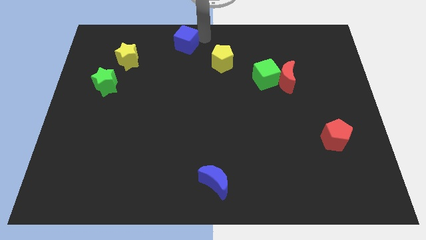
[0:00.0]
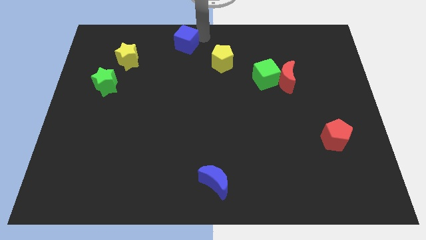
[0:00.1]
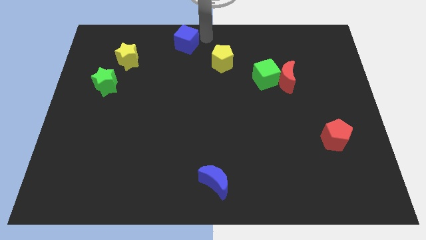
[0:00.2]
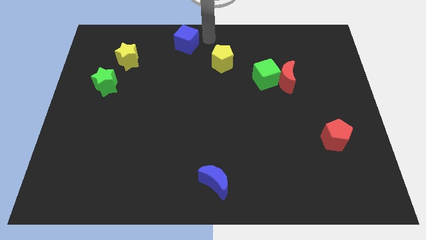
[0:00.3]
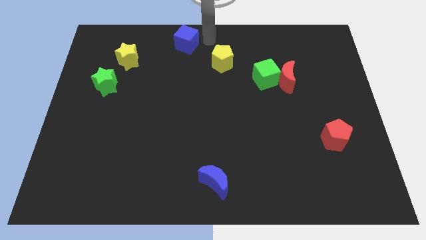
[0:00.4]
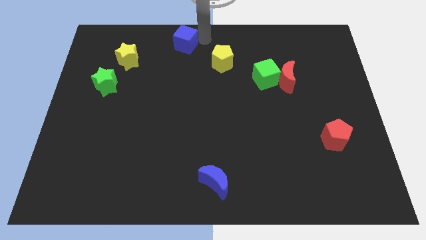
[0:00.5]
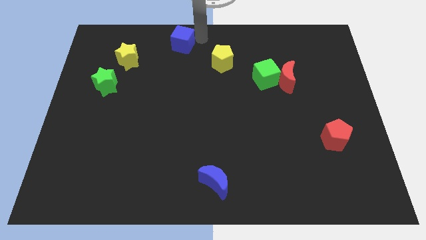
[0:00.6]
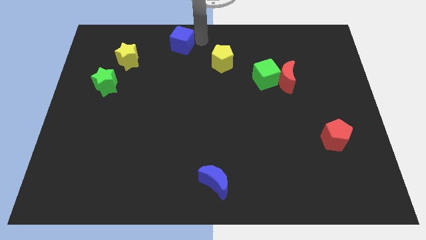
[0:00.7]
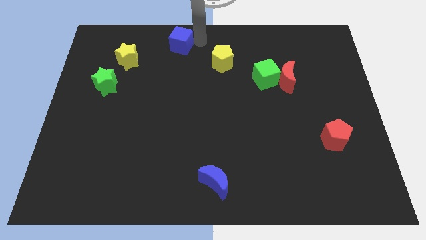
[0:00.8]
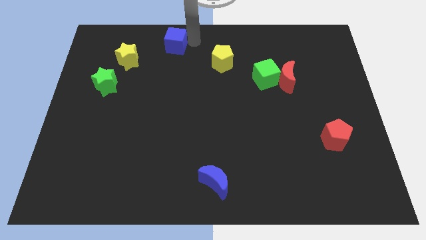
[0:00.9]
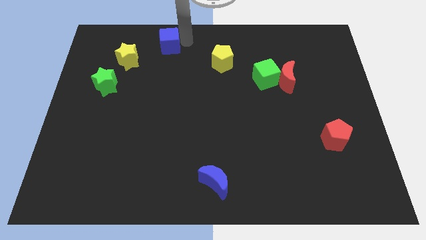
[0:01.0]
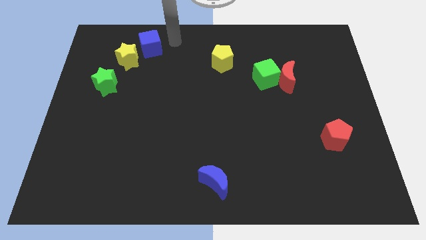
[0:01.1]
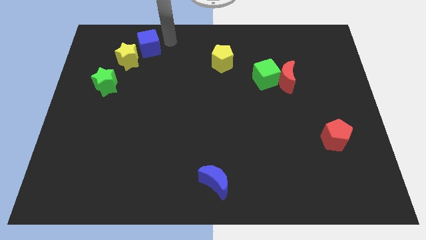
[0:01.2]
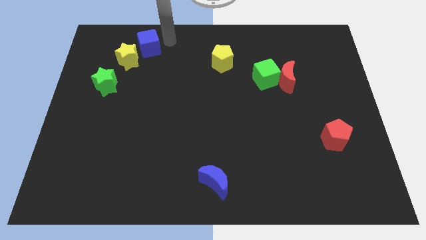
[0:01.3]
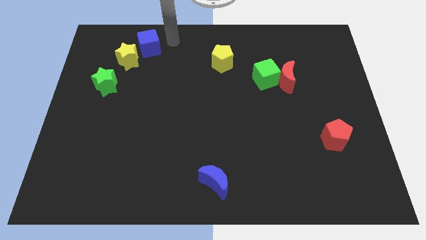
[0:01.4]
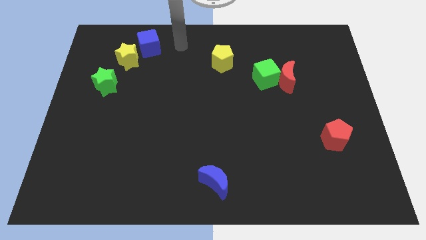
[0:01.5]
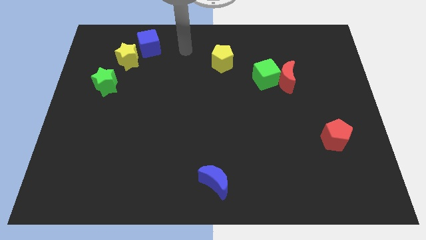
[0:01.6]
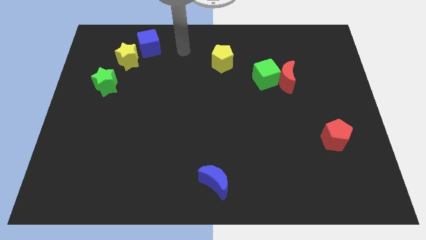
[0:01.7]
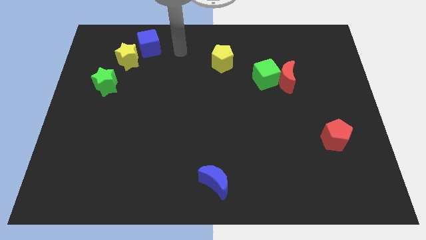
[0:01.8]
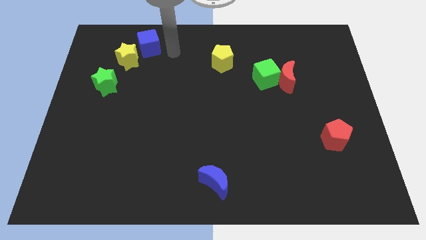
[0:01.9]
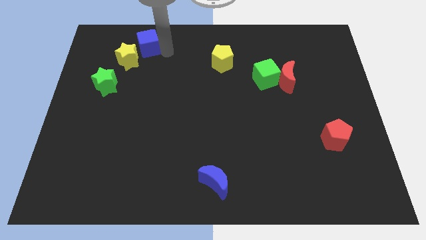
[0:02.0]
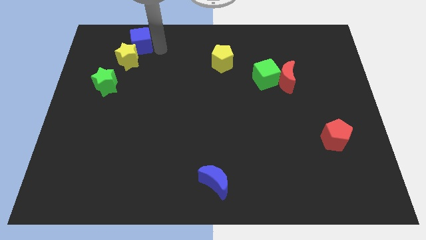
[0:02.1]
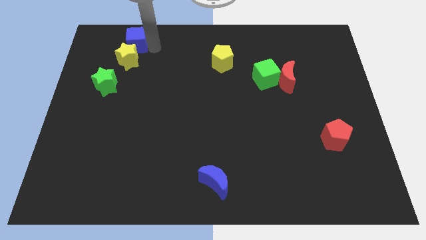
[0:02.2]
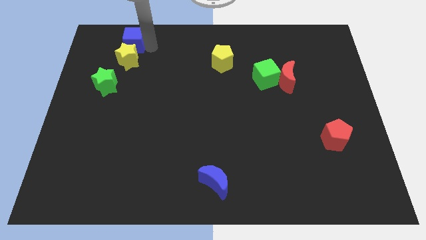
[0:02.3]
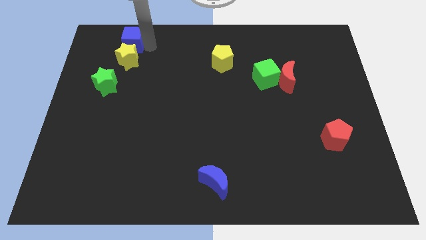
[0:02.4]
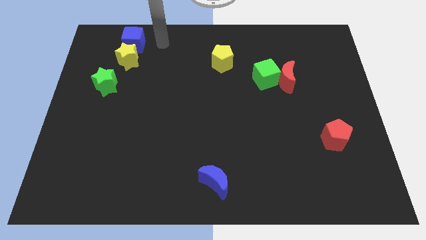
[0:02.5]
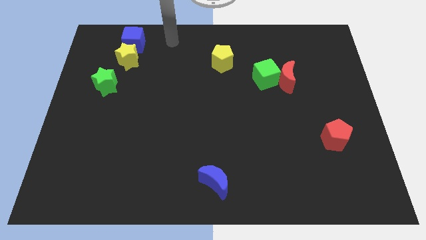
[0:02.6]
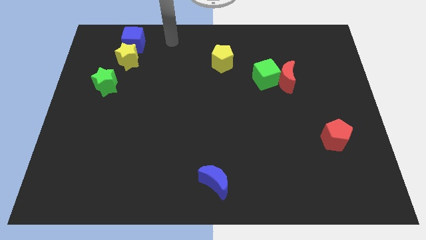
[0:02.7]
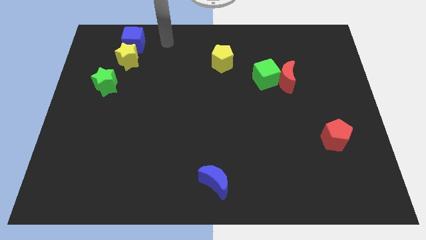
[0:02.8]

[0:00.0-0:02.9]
place the blue cube above the yellow star

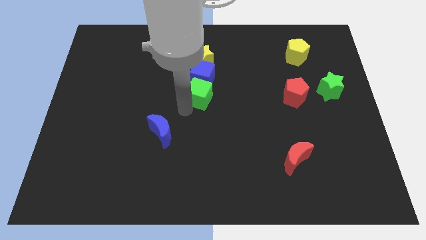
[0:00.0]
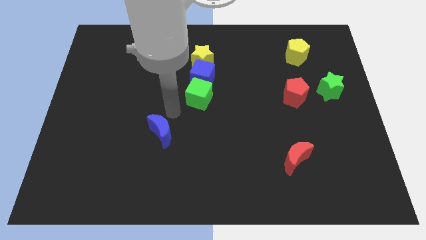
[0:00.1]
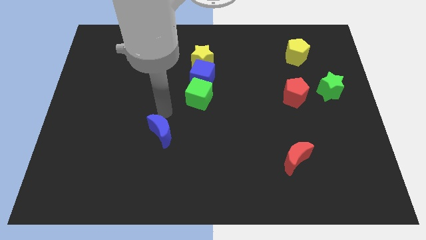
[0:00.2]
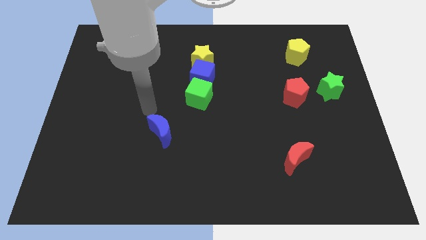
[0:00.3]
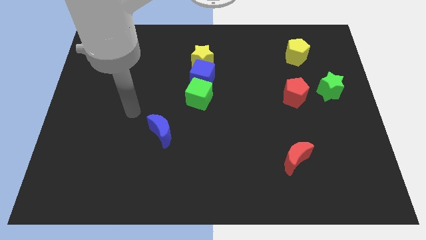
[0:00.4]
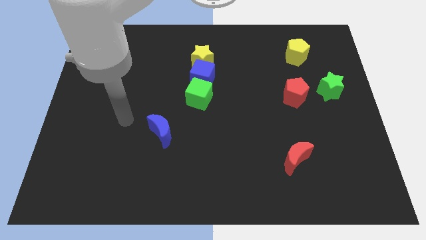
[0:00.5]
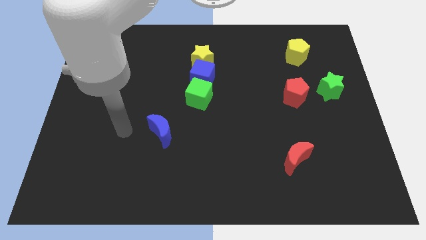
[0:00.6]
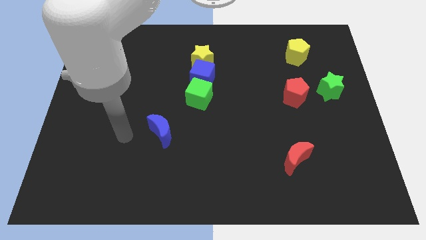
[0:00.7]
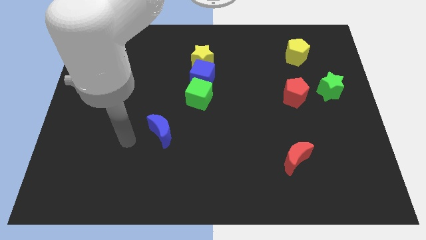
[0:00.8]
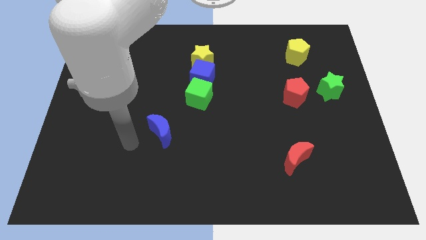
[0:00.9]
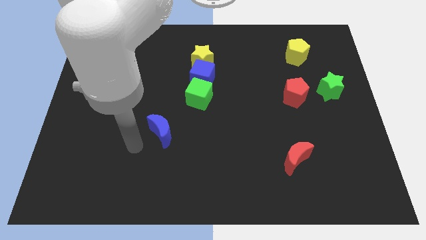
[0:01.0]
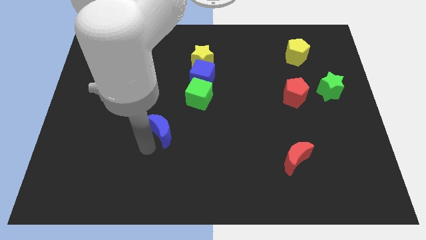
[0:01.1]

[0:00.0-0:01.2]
place your arm to the bottom of the blue moon

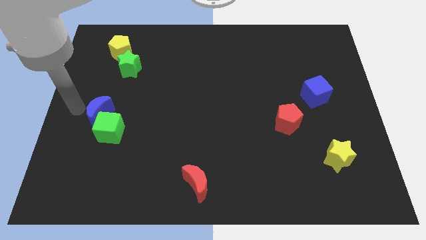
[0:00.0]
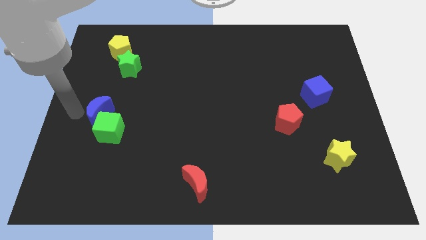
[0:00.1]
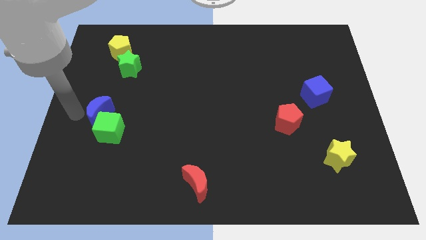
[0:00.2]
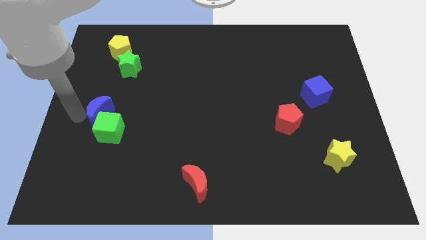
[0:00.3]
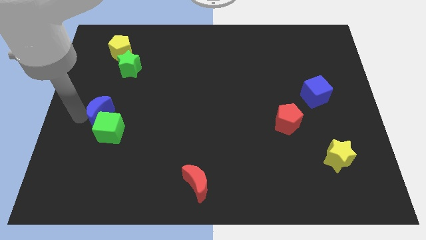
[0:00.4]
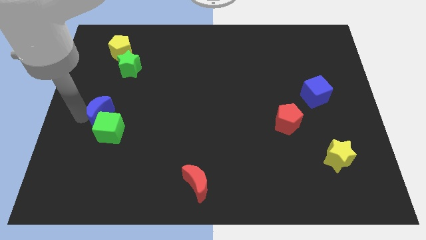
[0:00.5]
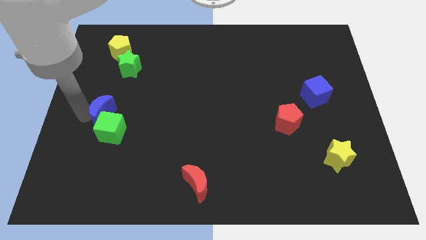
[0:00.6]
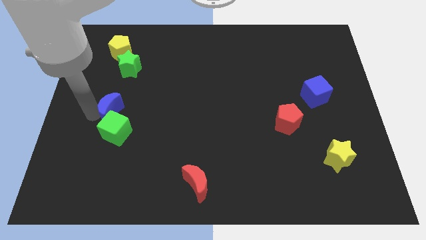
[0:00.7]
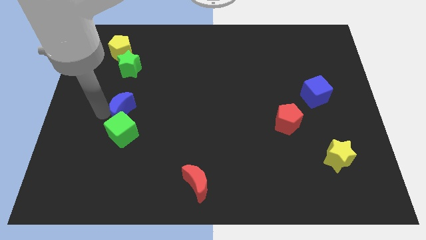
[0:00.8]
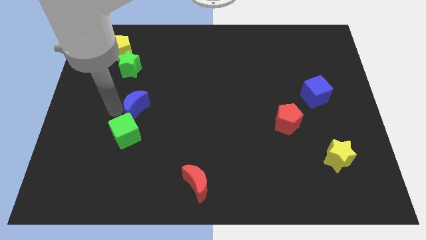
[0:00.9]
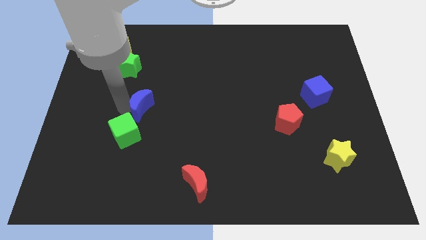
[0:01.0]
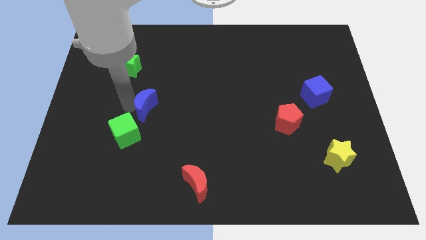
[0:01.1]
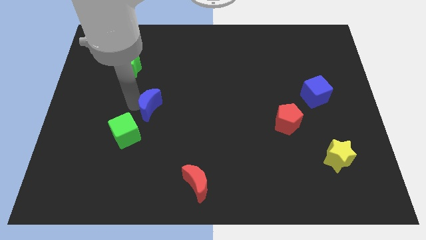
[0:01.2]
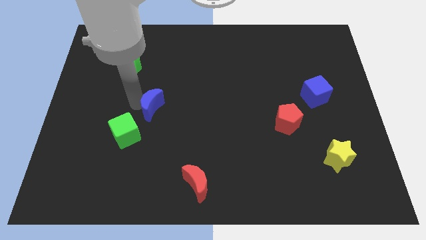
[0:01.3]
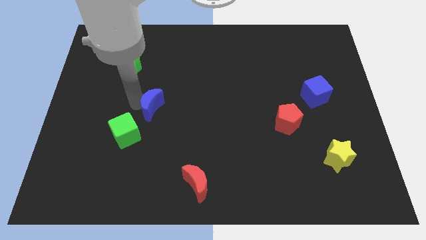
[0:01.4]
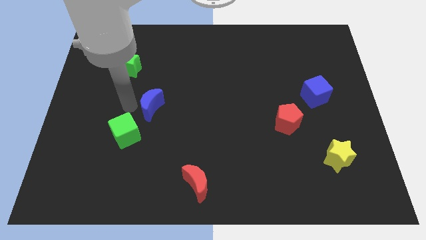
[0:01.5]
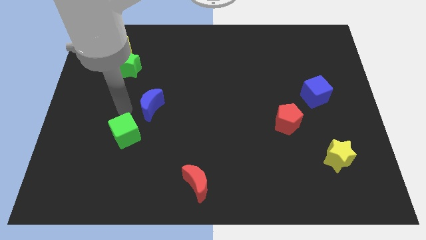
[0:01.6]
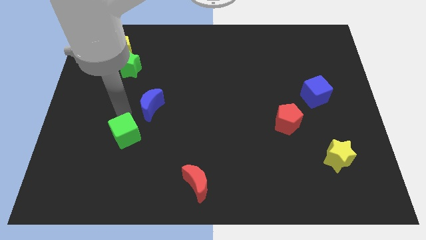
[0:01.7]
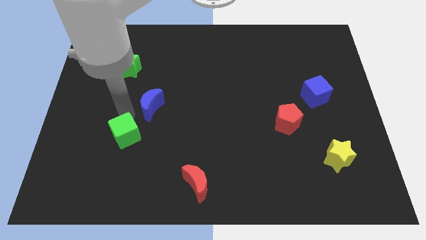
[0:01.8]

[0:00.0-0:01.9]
separate the blue moon from the green cube

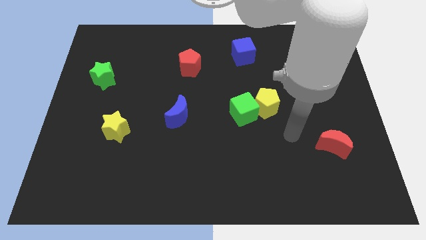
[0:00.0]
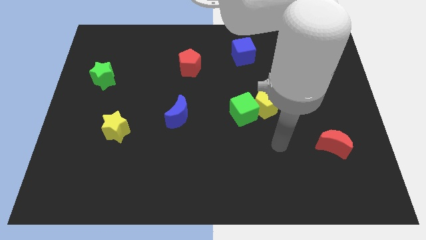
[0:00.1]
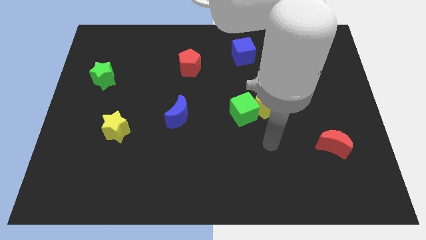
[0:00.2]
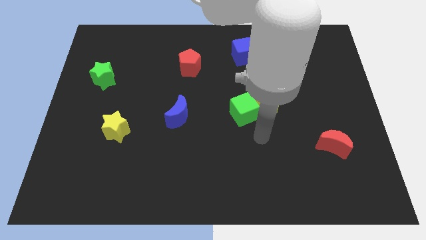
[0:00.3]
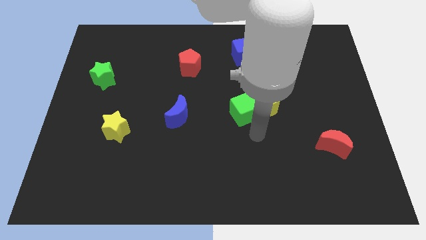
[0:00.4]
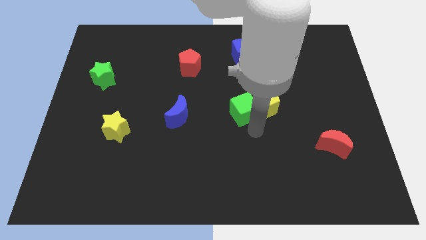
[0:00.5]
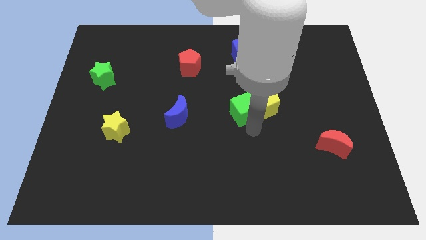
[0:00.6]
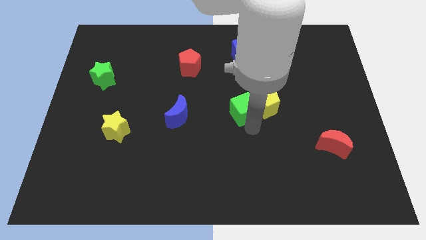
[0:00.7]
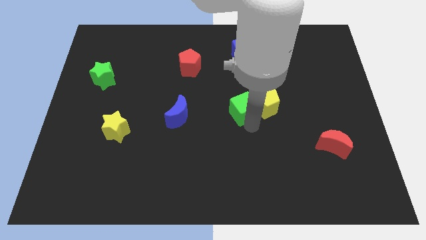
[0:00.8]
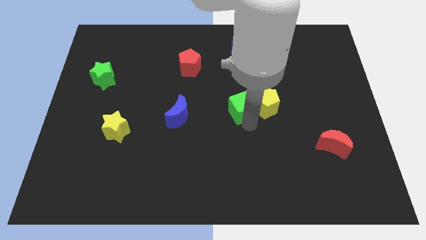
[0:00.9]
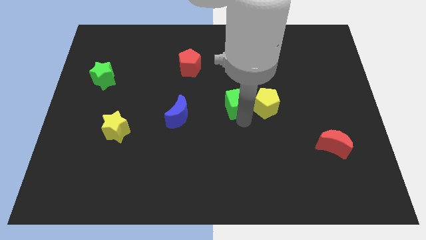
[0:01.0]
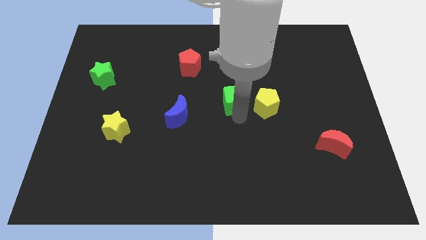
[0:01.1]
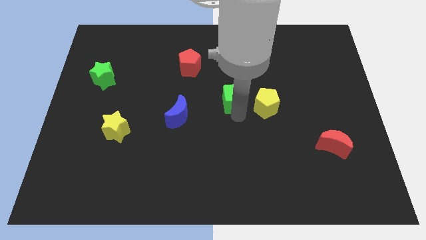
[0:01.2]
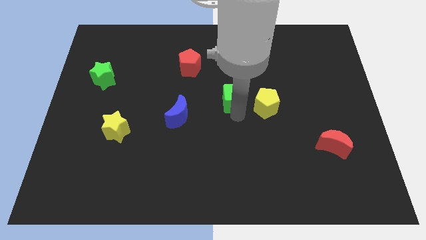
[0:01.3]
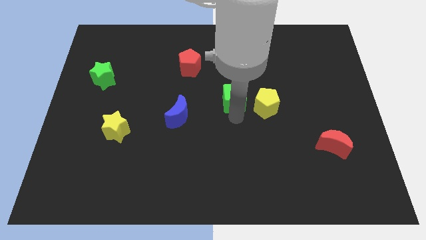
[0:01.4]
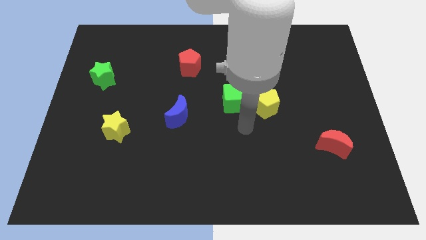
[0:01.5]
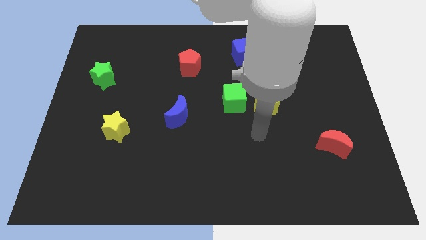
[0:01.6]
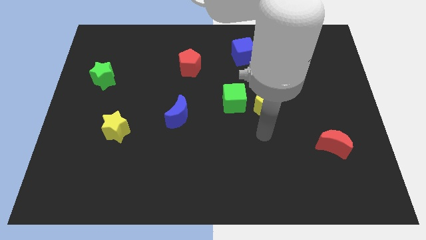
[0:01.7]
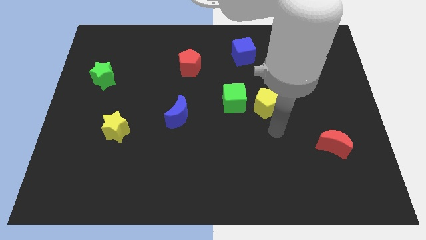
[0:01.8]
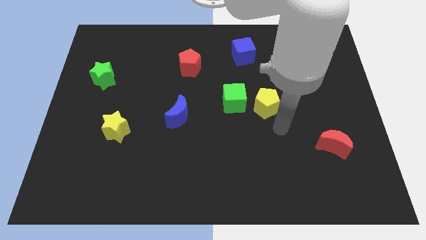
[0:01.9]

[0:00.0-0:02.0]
separate green cube from the yellow pentagon

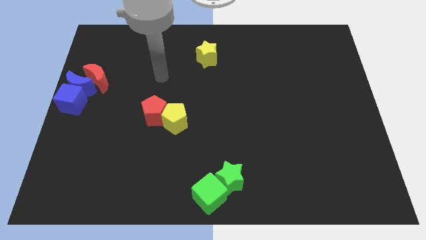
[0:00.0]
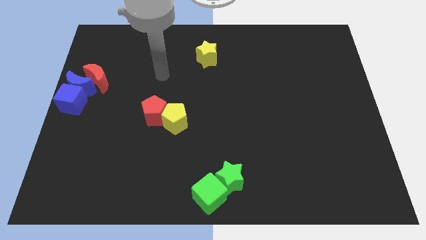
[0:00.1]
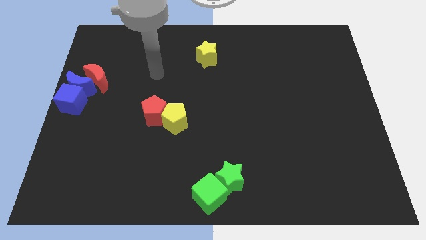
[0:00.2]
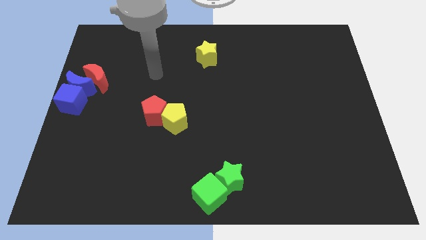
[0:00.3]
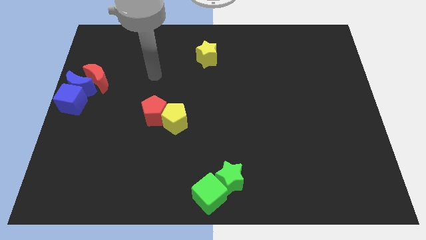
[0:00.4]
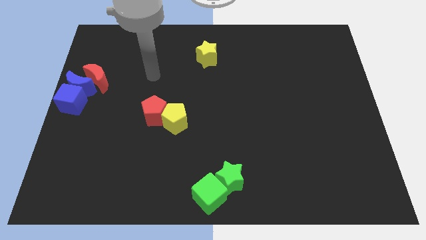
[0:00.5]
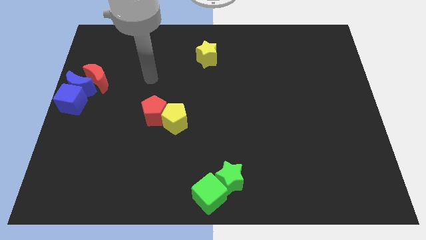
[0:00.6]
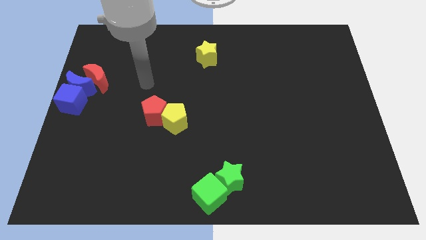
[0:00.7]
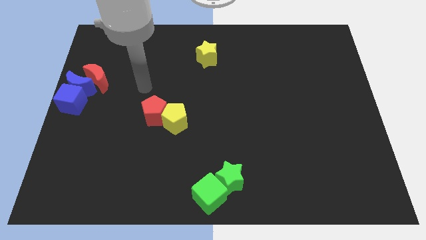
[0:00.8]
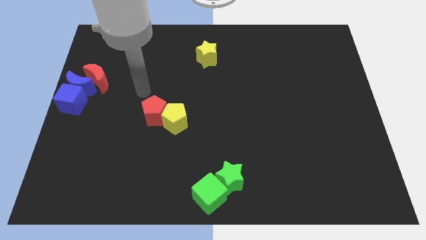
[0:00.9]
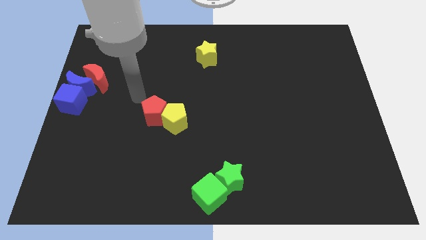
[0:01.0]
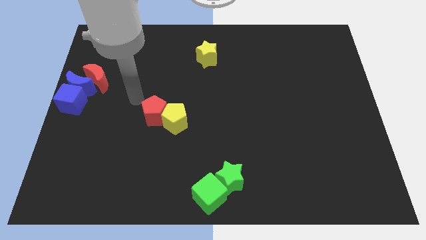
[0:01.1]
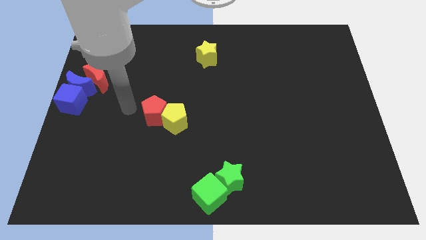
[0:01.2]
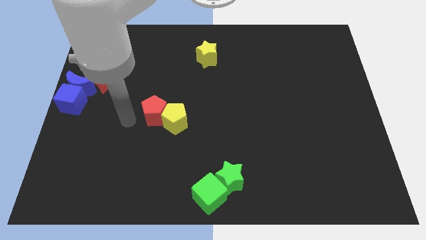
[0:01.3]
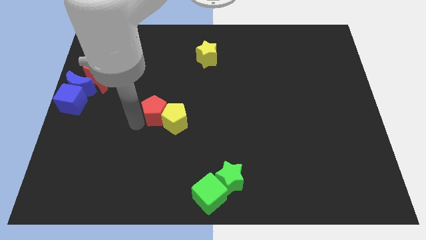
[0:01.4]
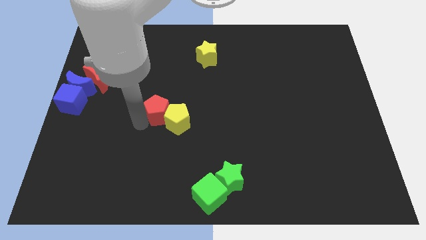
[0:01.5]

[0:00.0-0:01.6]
place your arm to the left side of the red pentagon
